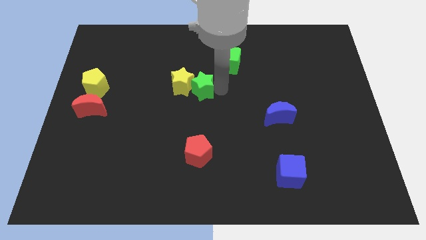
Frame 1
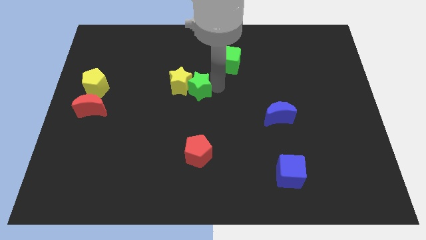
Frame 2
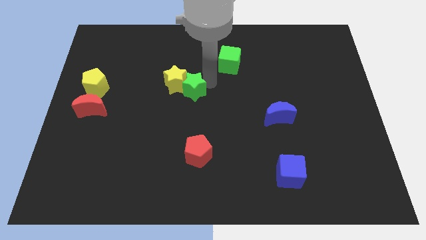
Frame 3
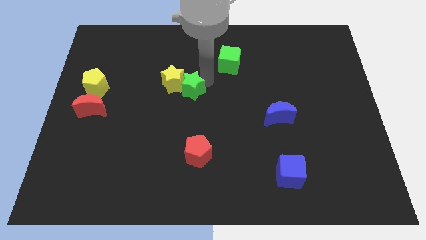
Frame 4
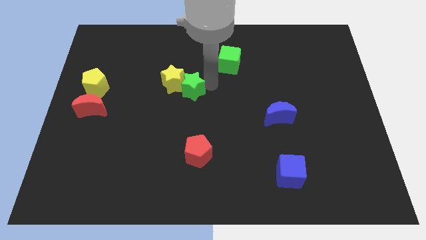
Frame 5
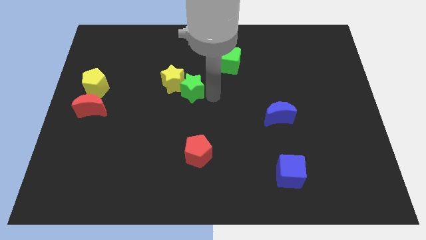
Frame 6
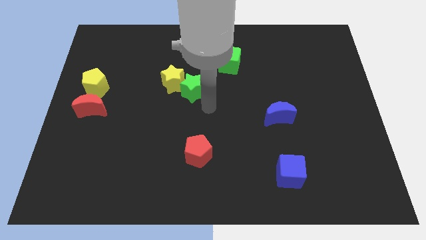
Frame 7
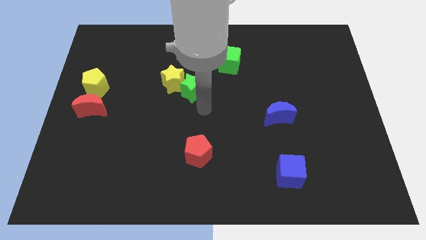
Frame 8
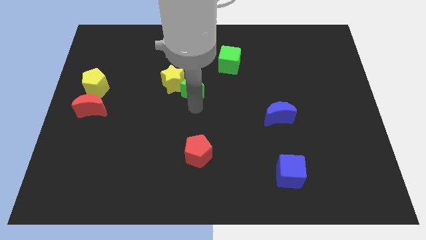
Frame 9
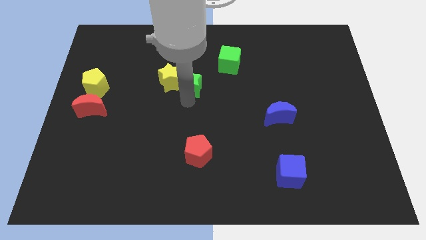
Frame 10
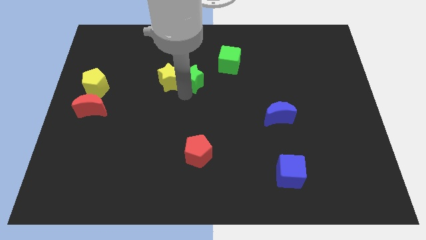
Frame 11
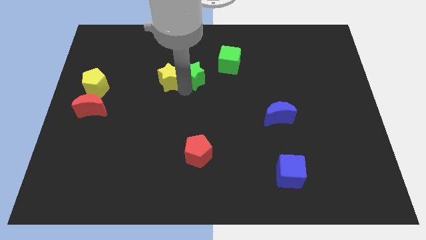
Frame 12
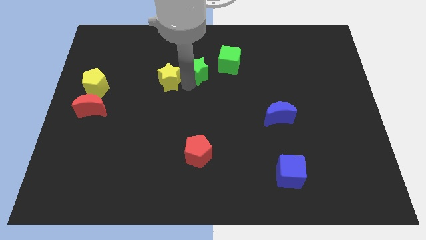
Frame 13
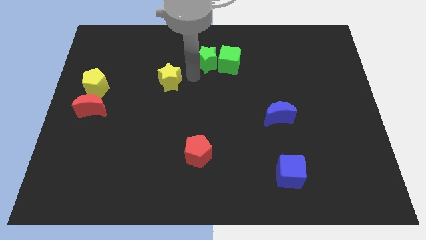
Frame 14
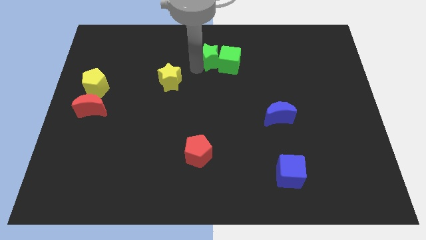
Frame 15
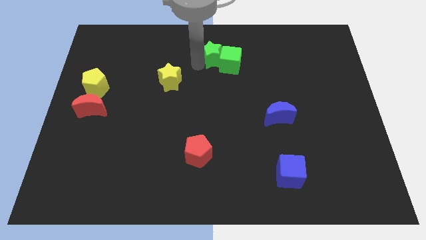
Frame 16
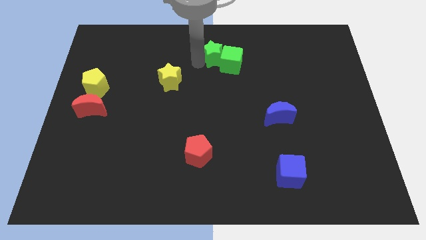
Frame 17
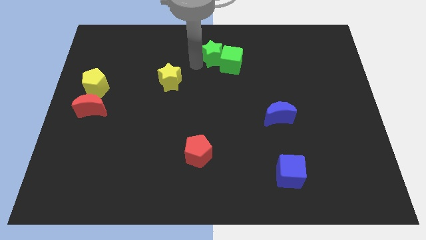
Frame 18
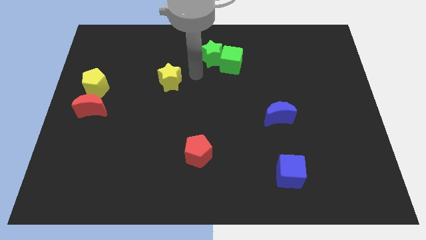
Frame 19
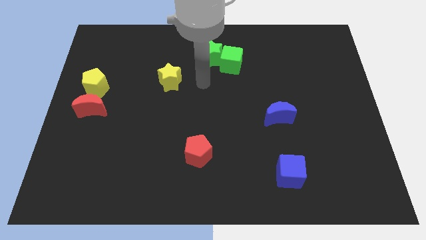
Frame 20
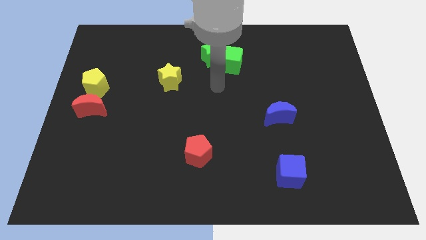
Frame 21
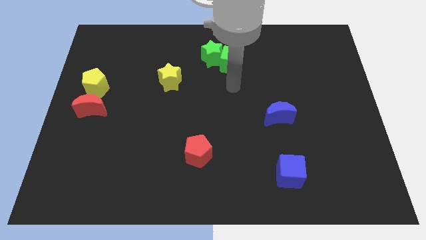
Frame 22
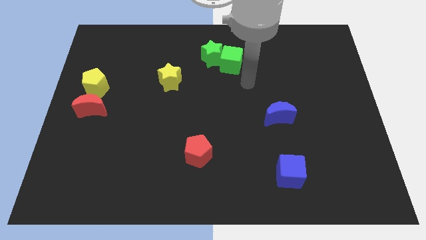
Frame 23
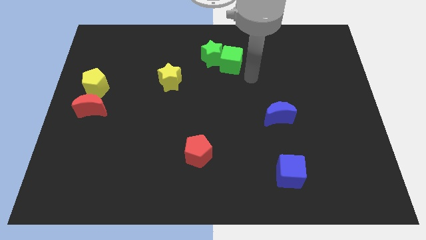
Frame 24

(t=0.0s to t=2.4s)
push the green star into the green cube

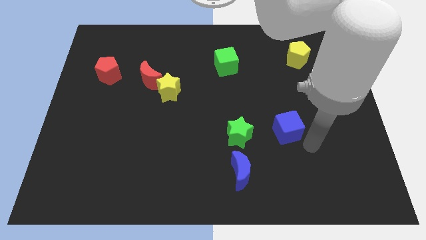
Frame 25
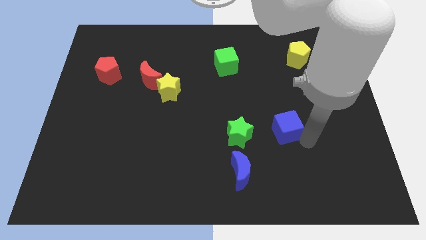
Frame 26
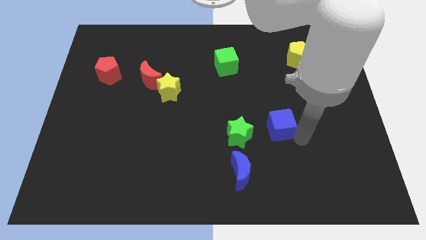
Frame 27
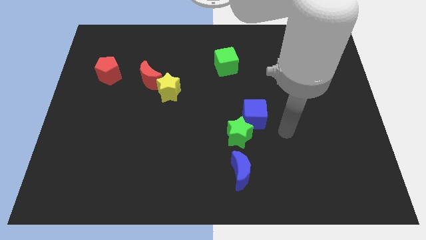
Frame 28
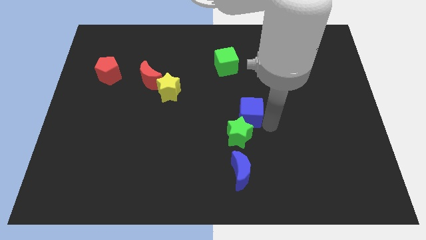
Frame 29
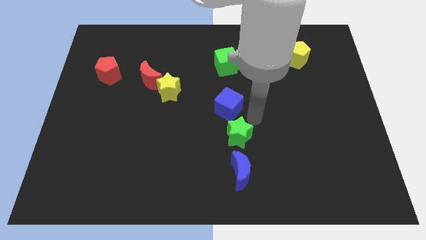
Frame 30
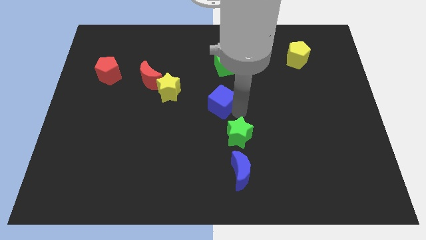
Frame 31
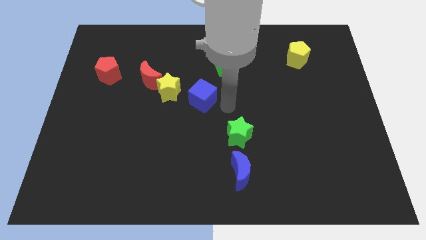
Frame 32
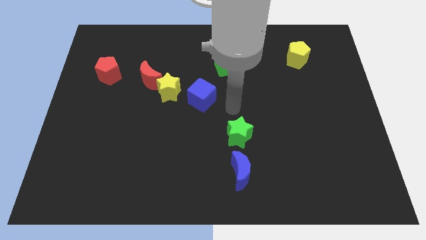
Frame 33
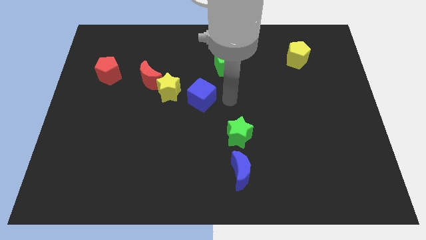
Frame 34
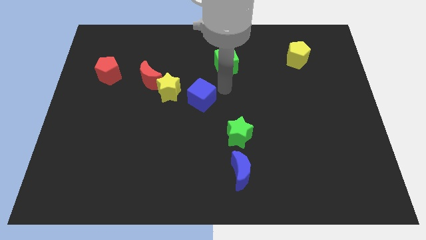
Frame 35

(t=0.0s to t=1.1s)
push the blue cube slightly towards the yellow star

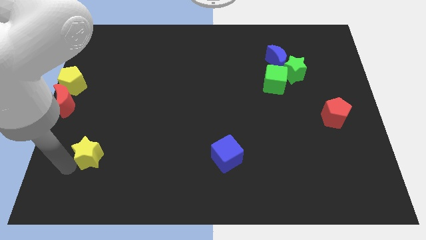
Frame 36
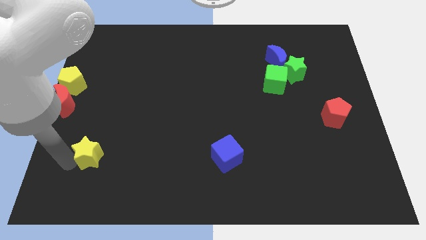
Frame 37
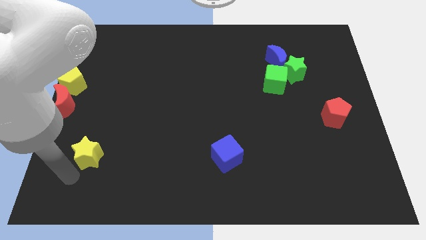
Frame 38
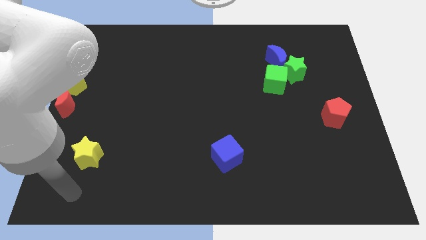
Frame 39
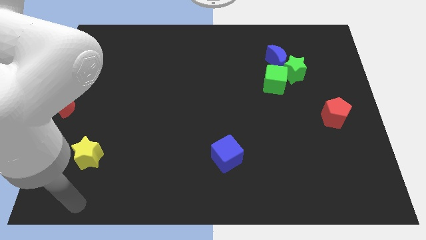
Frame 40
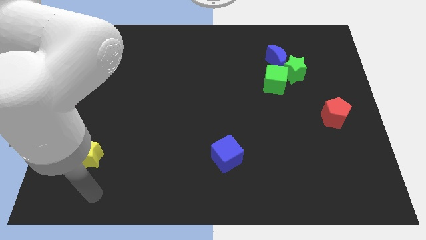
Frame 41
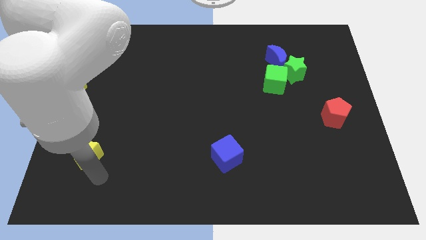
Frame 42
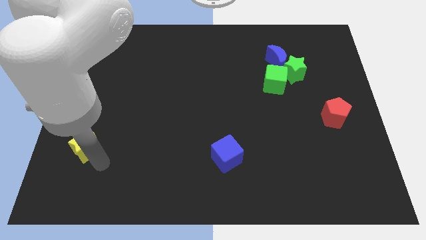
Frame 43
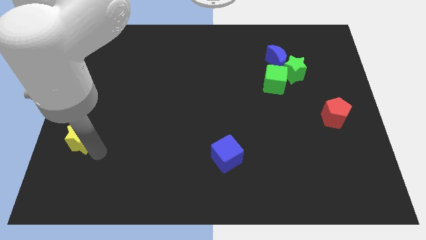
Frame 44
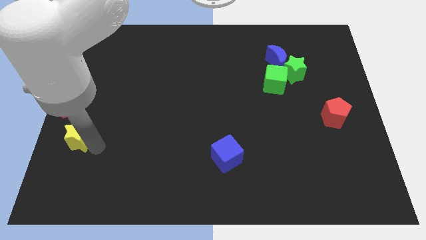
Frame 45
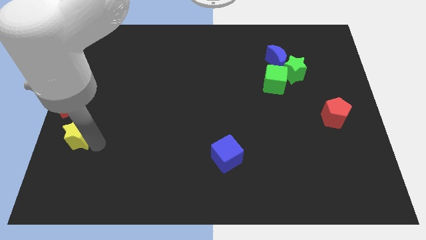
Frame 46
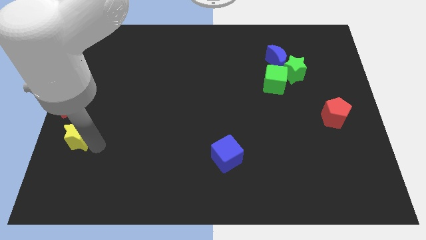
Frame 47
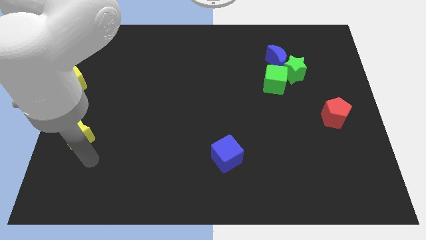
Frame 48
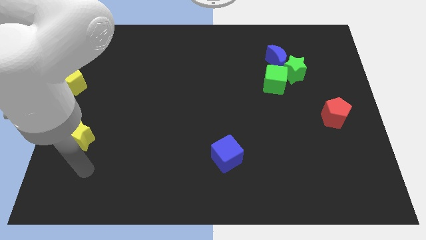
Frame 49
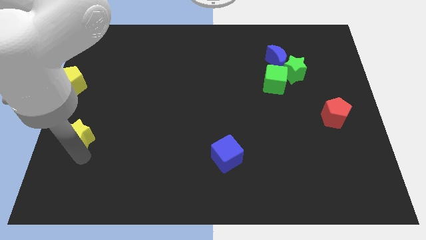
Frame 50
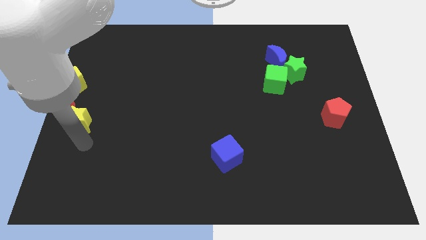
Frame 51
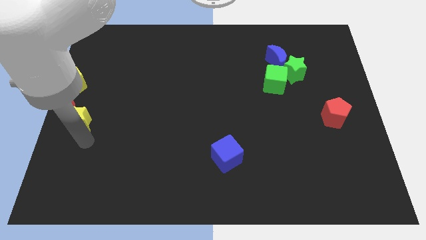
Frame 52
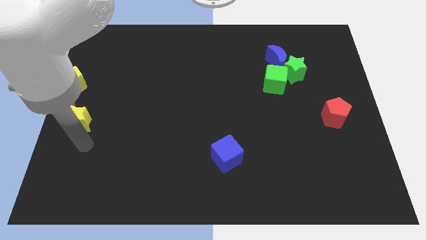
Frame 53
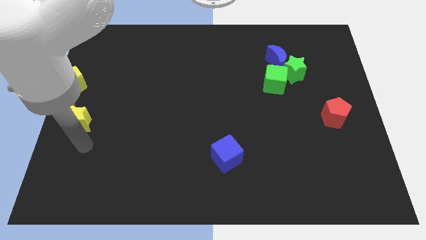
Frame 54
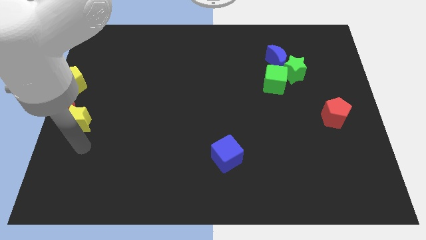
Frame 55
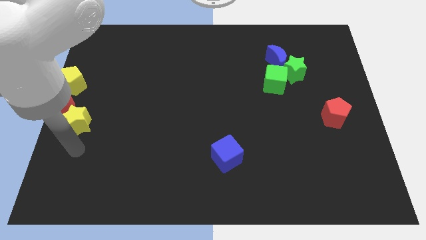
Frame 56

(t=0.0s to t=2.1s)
push yellow star near to the bottom of the red crescent

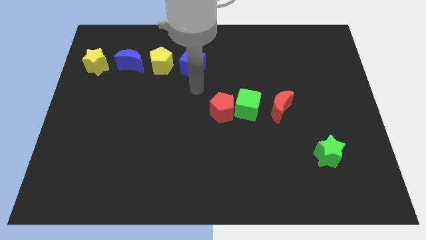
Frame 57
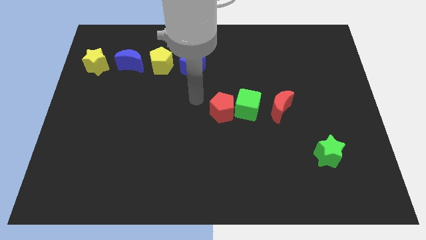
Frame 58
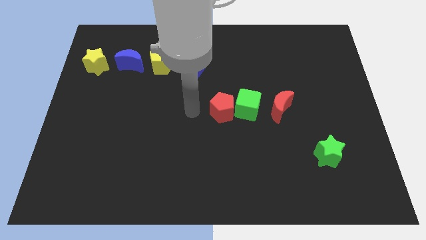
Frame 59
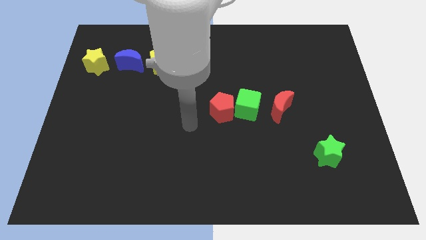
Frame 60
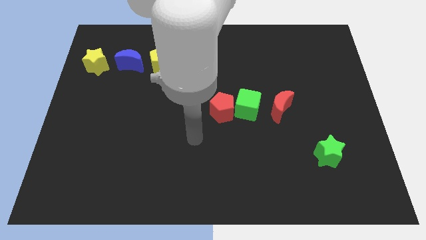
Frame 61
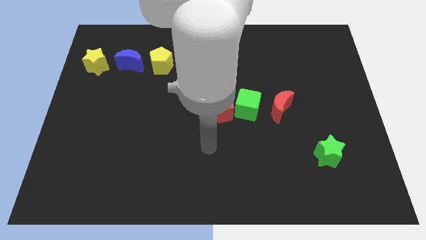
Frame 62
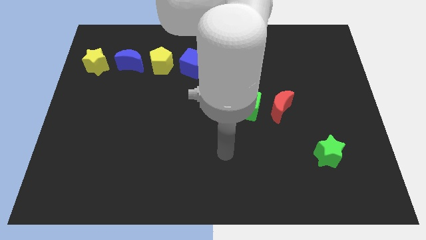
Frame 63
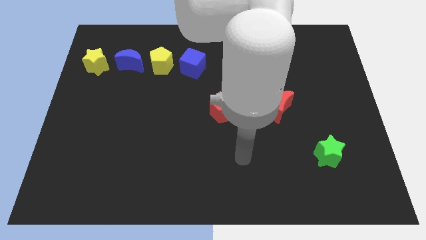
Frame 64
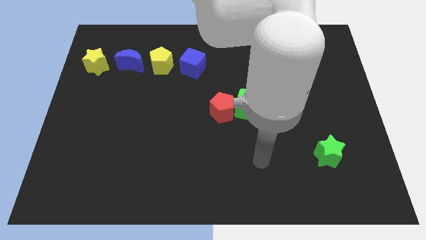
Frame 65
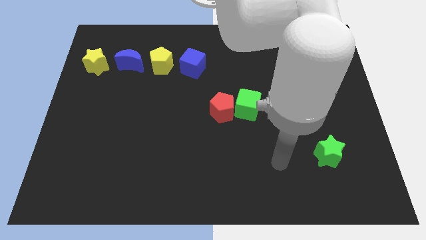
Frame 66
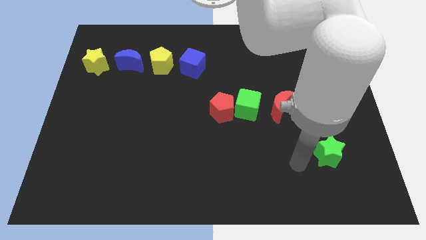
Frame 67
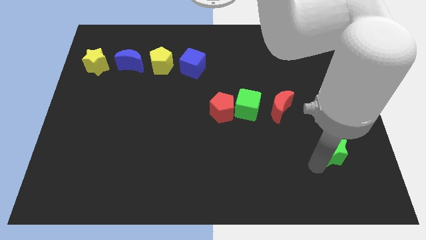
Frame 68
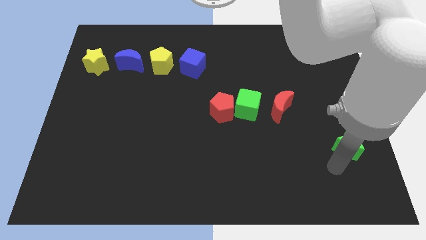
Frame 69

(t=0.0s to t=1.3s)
move your arm away from blue cube

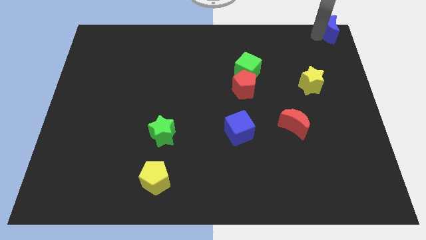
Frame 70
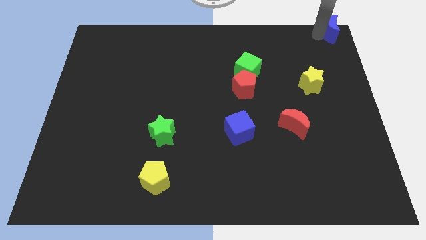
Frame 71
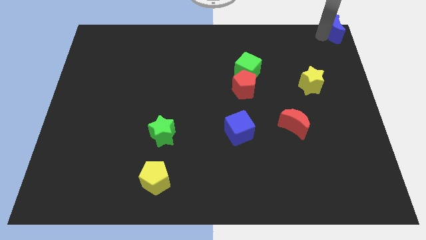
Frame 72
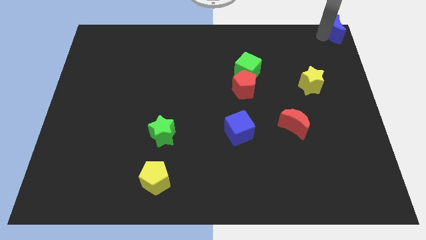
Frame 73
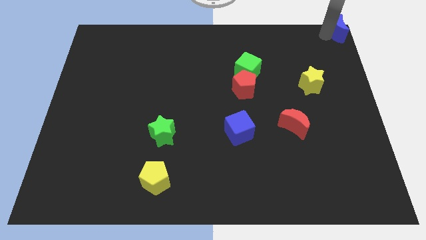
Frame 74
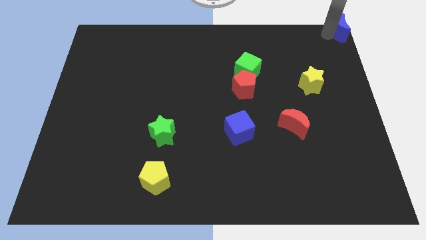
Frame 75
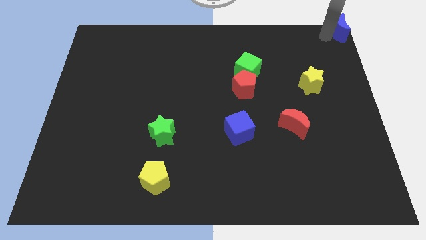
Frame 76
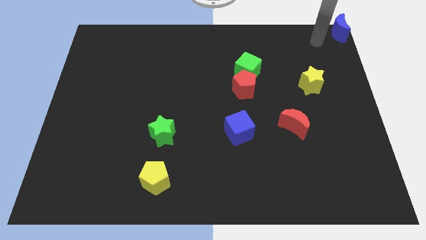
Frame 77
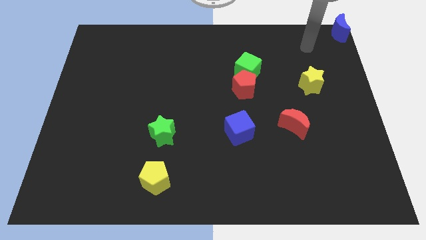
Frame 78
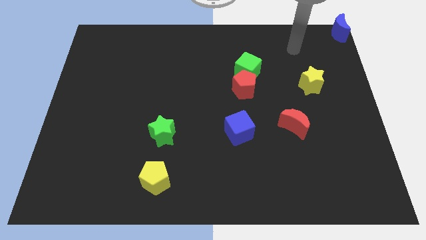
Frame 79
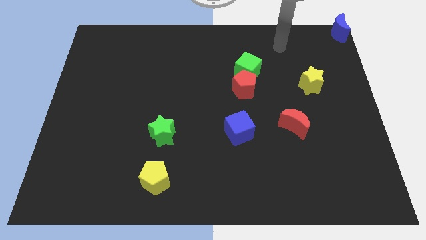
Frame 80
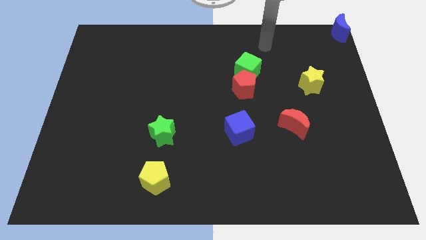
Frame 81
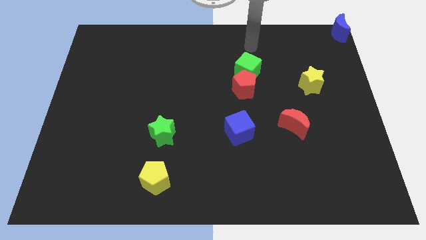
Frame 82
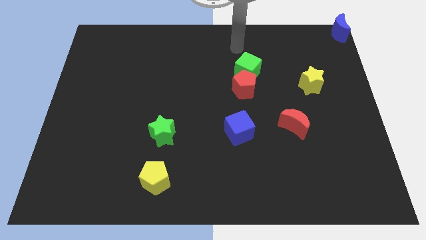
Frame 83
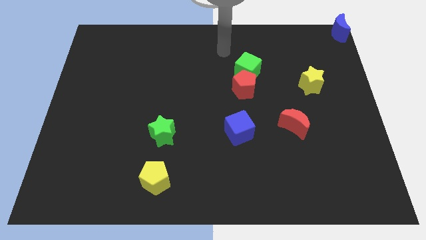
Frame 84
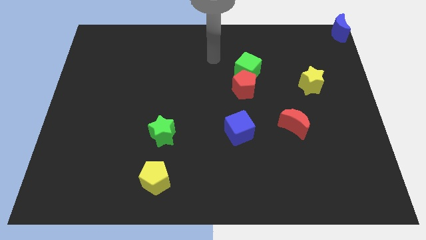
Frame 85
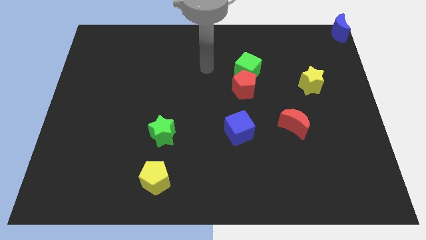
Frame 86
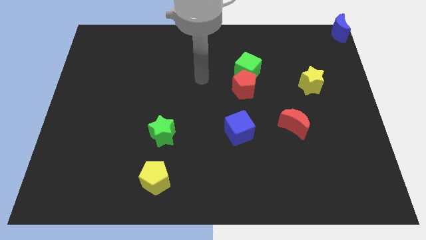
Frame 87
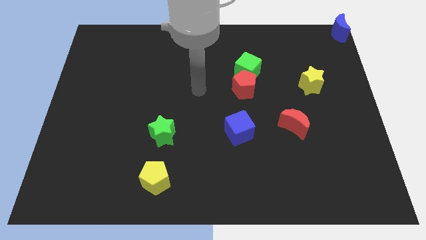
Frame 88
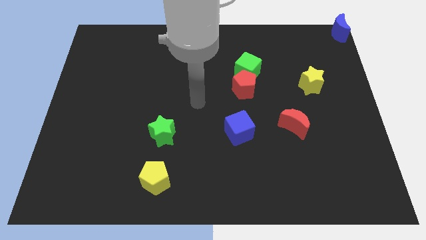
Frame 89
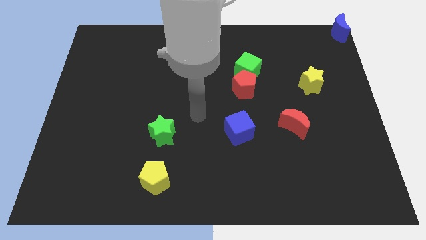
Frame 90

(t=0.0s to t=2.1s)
slide the blue moon slightly to the right
